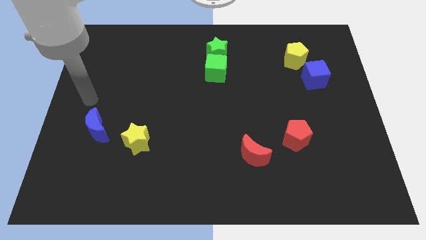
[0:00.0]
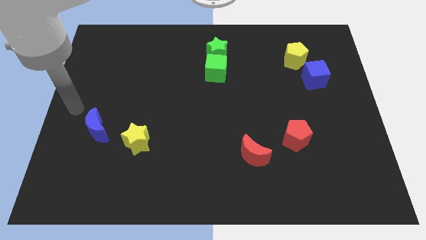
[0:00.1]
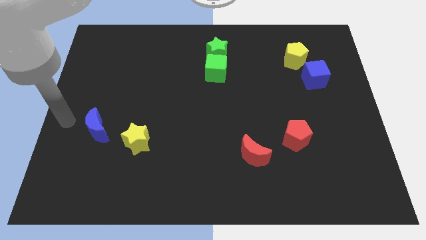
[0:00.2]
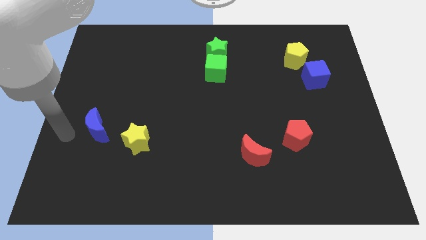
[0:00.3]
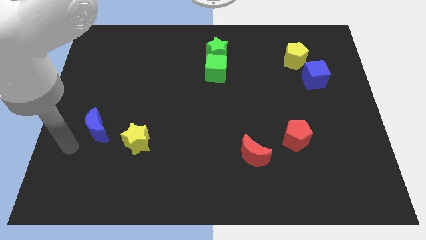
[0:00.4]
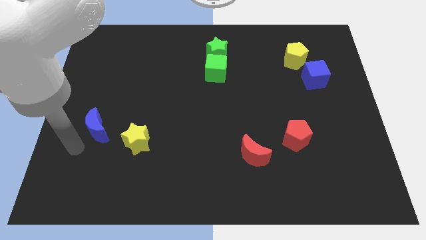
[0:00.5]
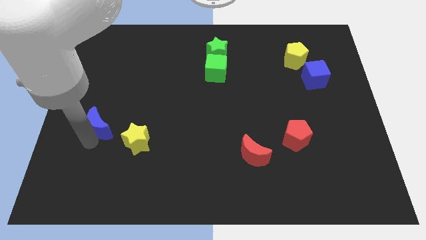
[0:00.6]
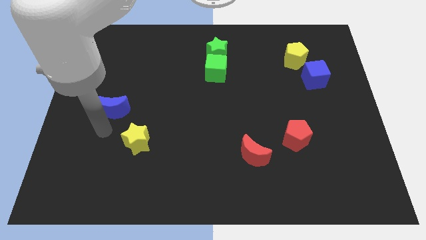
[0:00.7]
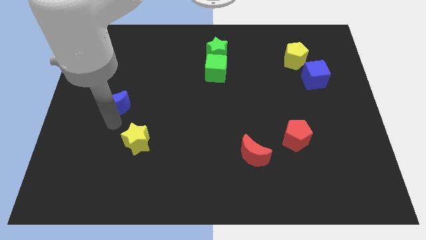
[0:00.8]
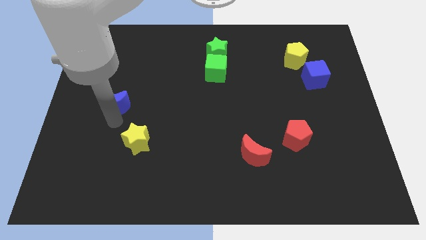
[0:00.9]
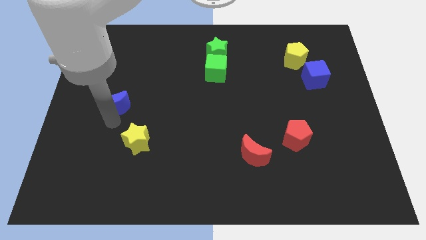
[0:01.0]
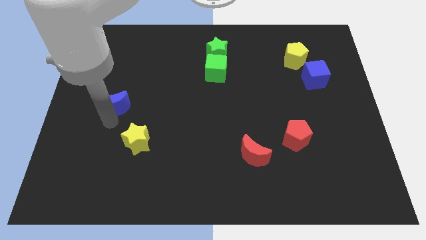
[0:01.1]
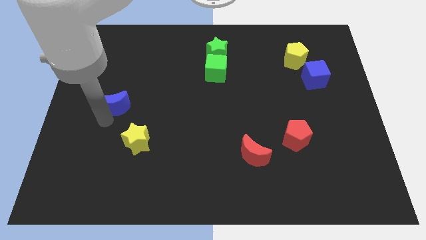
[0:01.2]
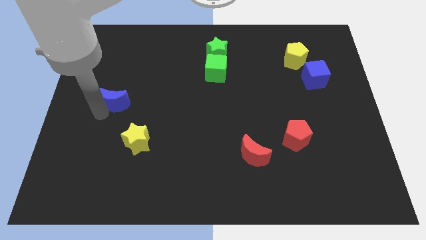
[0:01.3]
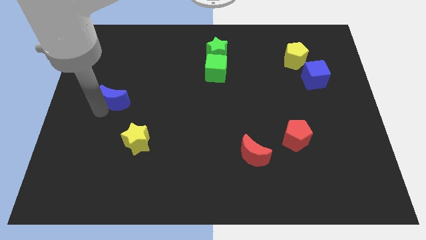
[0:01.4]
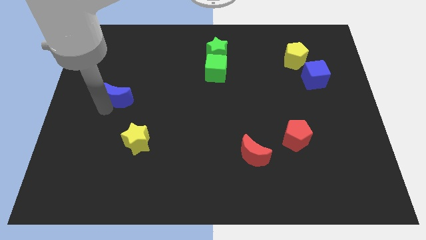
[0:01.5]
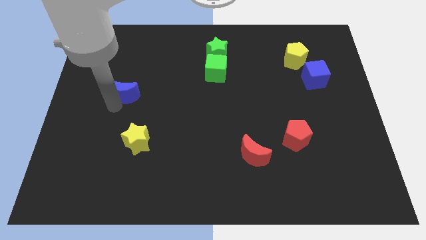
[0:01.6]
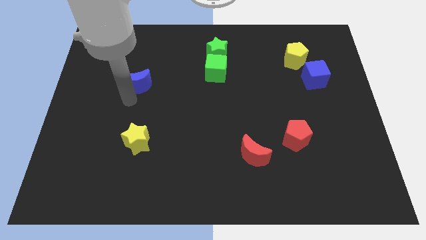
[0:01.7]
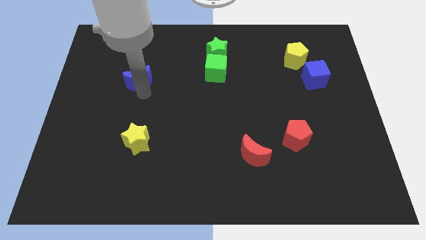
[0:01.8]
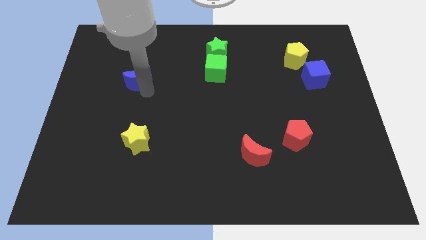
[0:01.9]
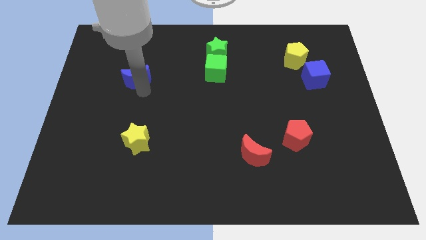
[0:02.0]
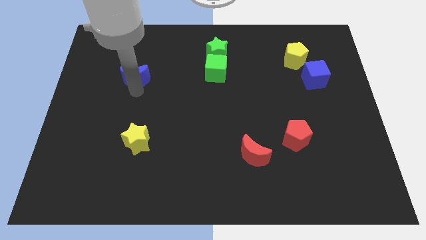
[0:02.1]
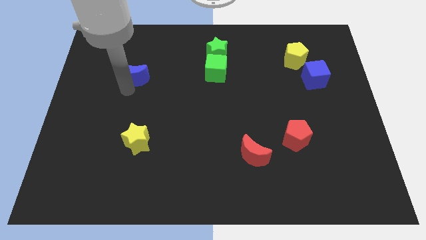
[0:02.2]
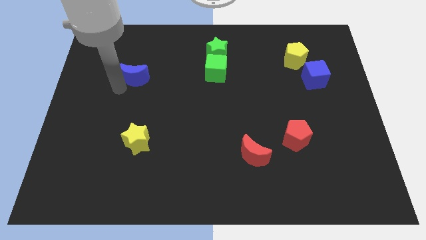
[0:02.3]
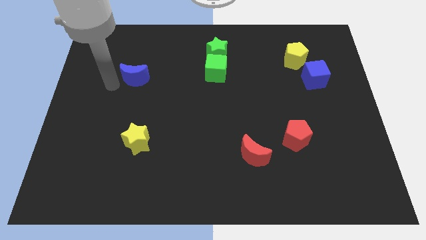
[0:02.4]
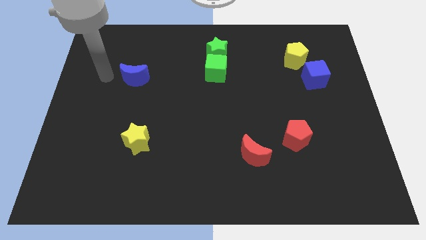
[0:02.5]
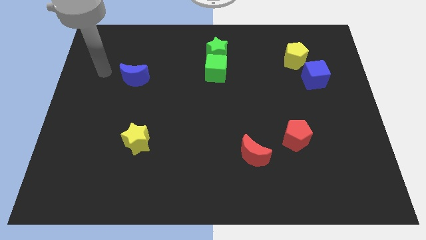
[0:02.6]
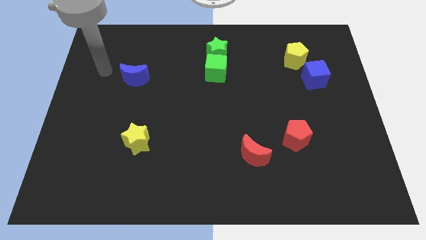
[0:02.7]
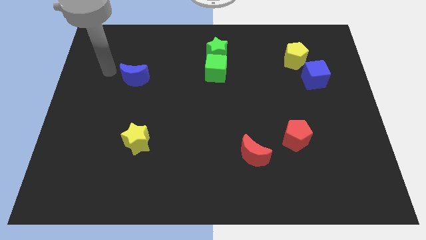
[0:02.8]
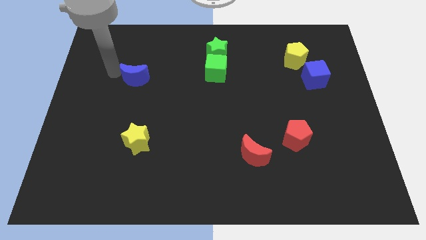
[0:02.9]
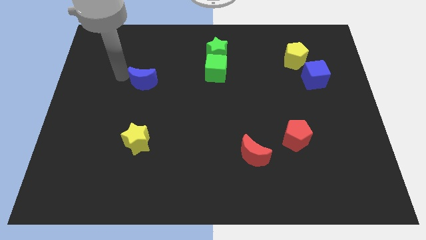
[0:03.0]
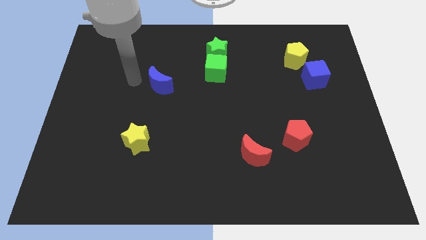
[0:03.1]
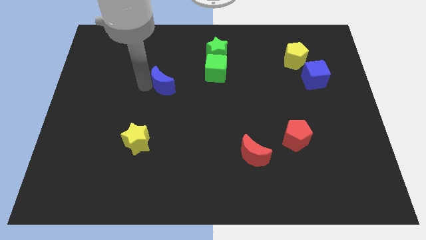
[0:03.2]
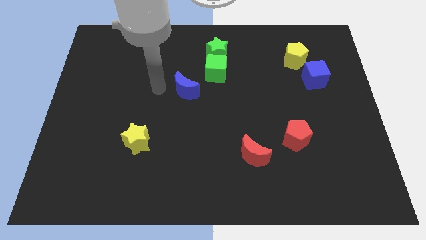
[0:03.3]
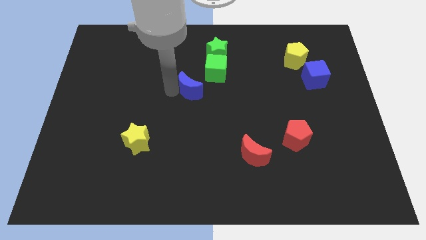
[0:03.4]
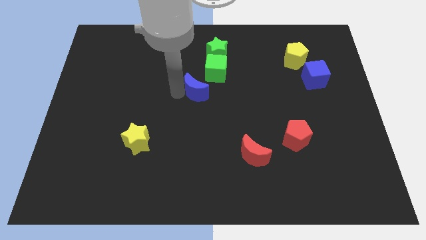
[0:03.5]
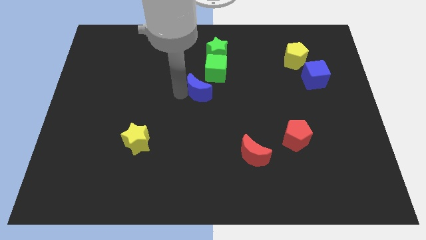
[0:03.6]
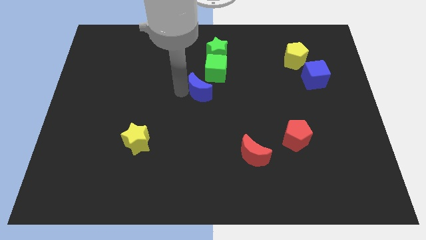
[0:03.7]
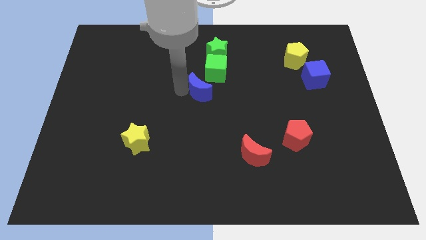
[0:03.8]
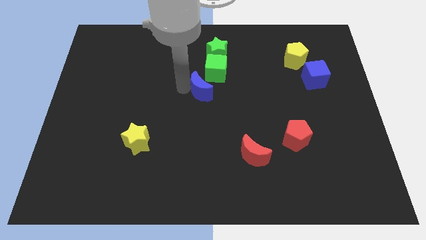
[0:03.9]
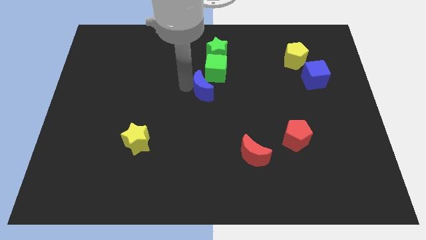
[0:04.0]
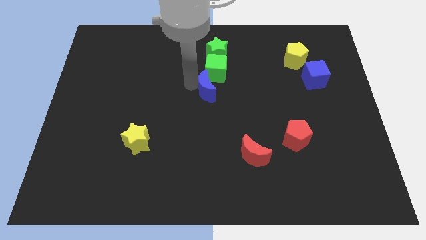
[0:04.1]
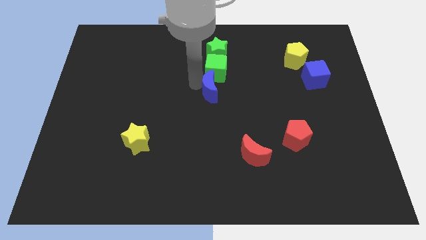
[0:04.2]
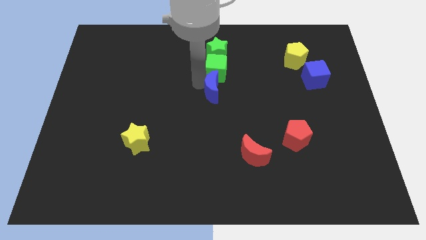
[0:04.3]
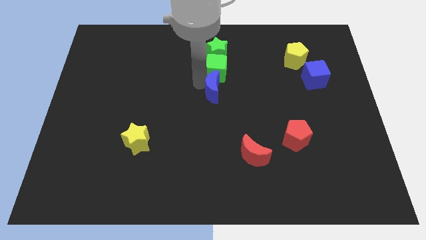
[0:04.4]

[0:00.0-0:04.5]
push the blue crescent towards the green cube

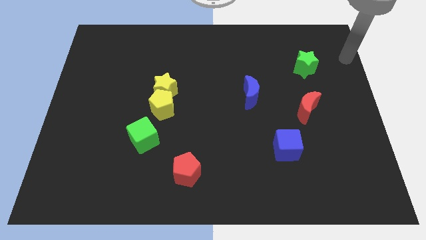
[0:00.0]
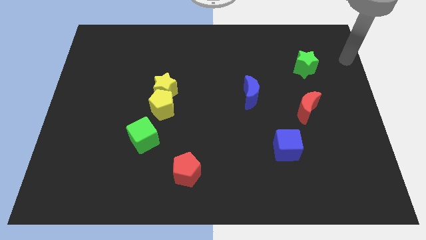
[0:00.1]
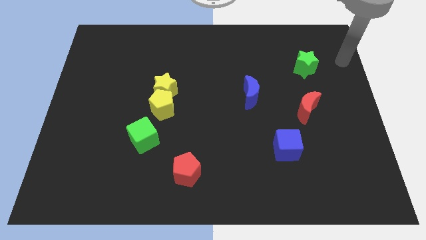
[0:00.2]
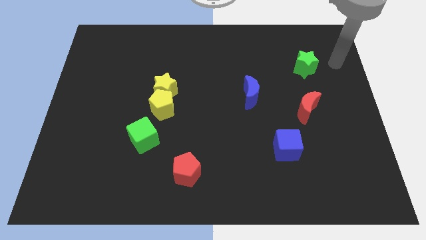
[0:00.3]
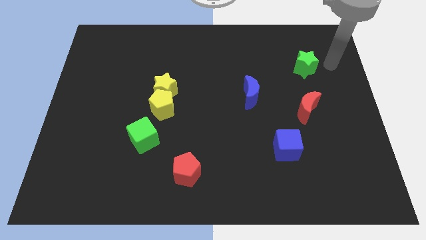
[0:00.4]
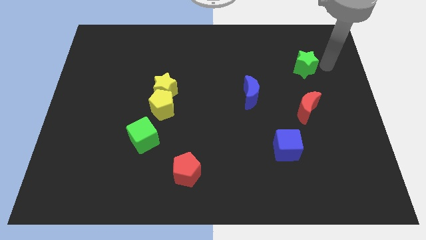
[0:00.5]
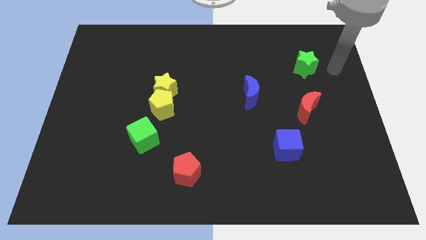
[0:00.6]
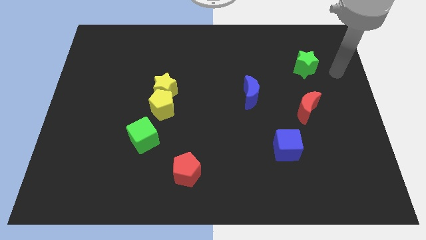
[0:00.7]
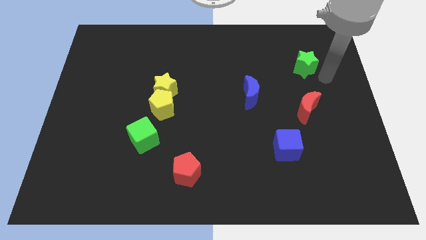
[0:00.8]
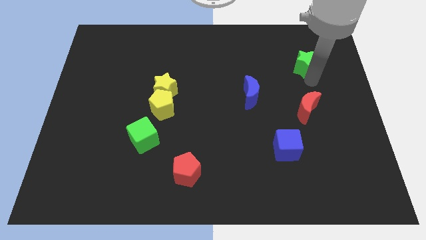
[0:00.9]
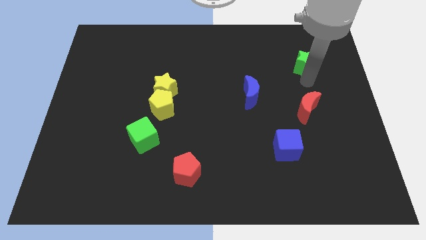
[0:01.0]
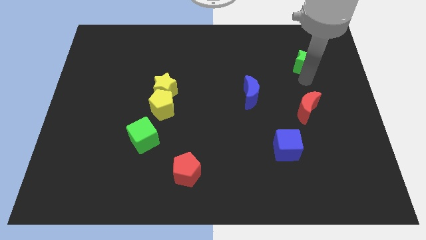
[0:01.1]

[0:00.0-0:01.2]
place your arm below the green star

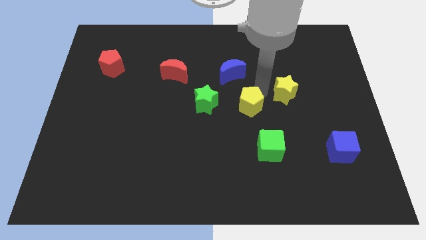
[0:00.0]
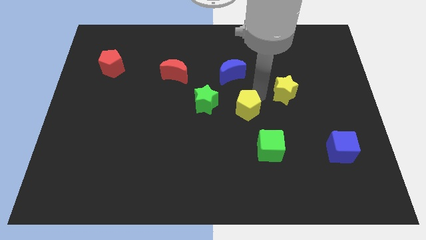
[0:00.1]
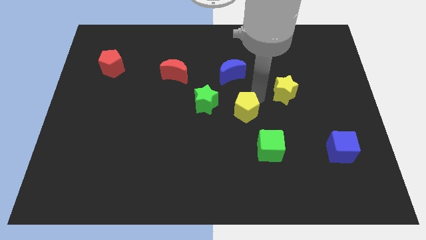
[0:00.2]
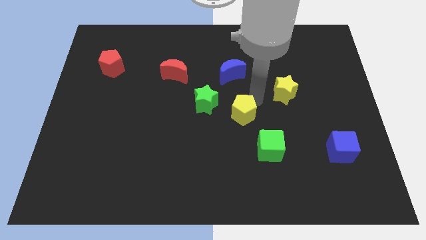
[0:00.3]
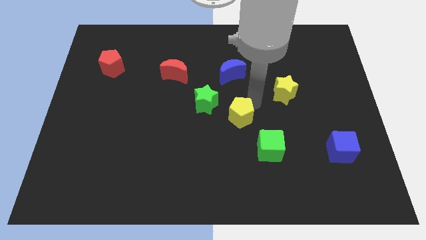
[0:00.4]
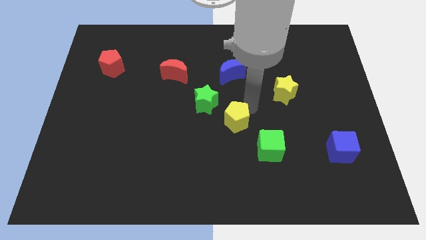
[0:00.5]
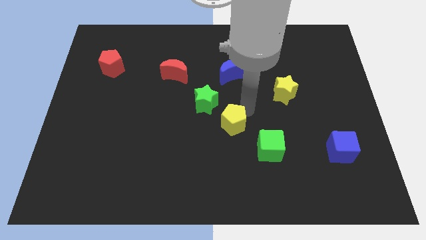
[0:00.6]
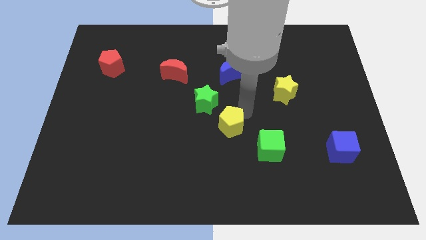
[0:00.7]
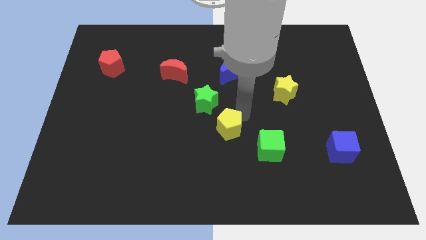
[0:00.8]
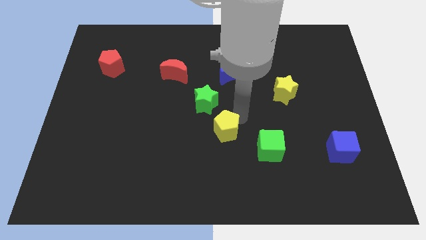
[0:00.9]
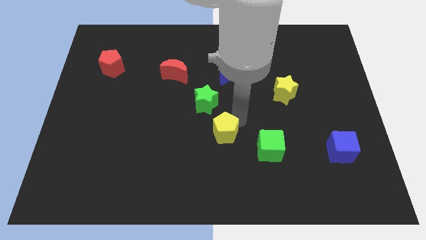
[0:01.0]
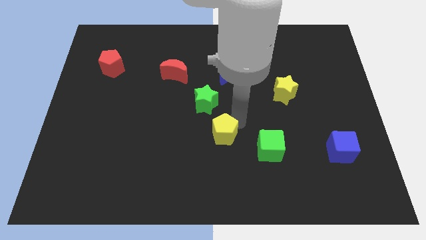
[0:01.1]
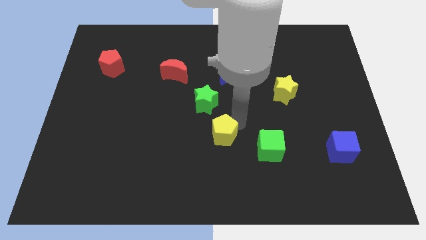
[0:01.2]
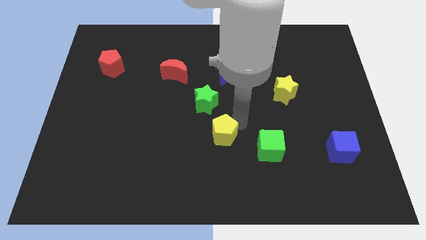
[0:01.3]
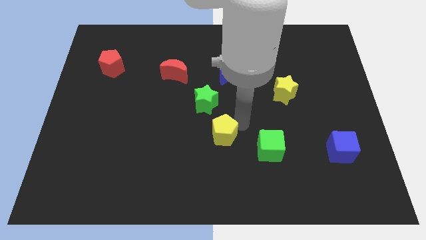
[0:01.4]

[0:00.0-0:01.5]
push the yellow pentagon to the bottom right of the green star

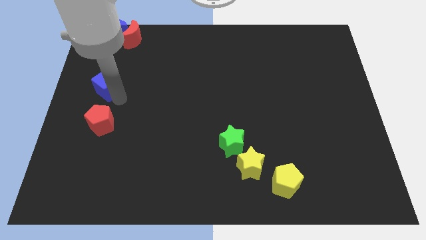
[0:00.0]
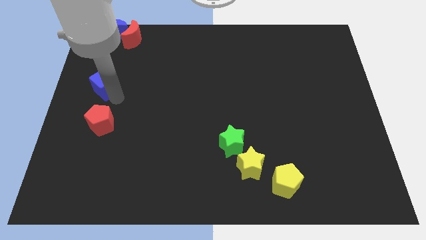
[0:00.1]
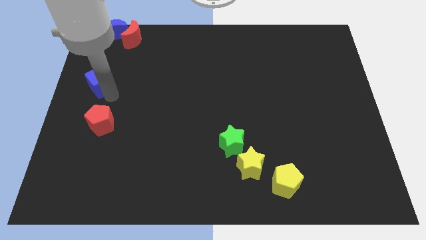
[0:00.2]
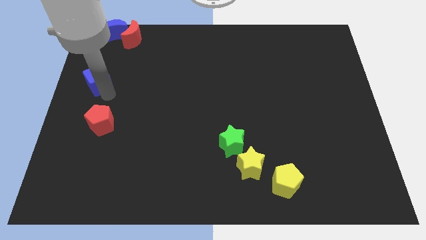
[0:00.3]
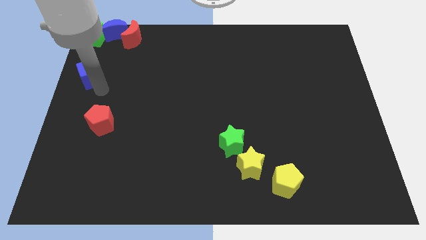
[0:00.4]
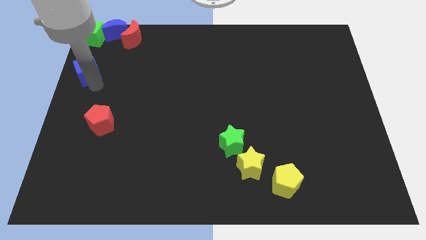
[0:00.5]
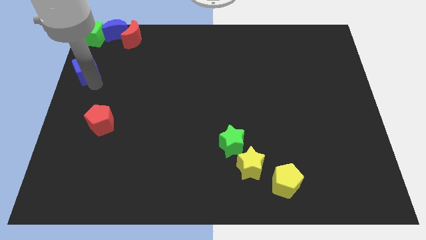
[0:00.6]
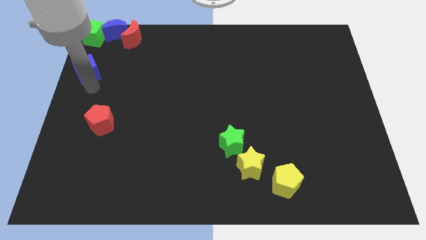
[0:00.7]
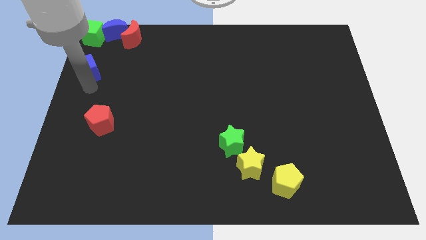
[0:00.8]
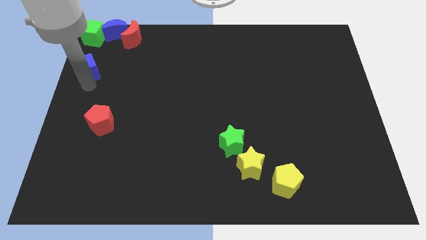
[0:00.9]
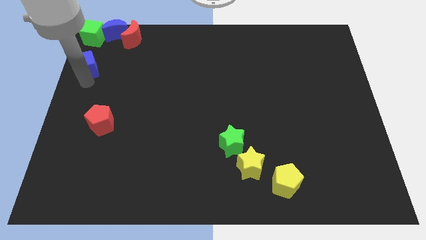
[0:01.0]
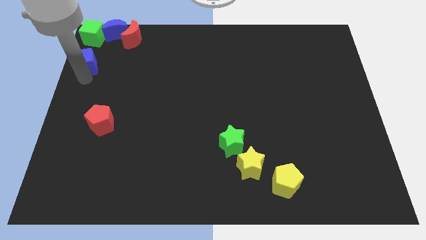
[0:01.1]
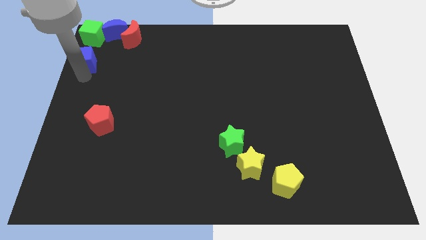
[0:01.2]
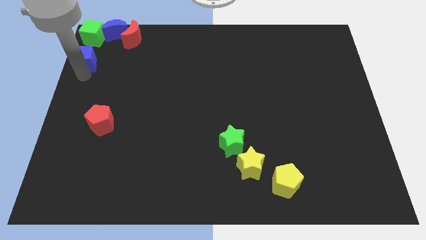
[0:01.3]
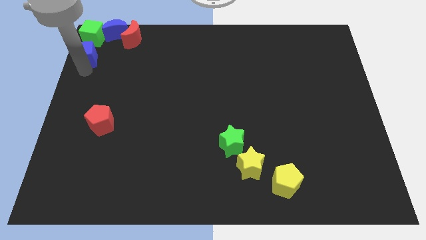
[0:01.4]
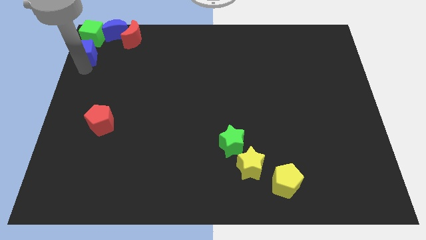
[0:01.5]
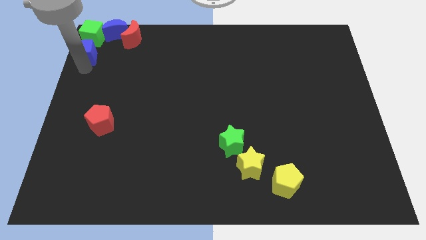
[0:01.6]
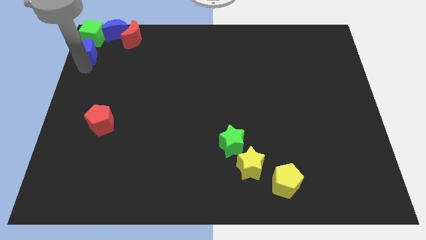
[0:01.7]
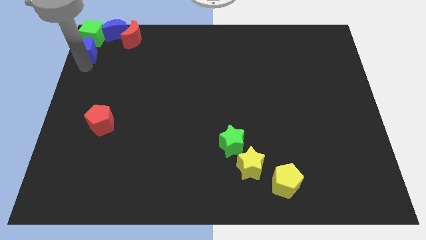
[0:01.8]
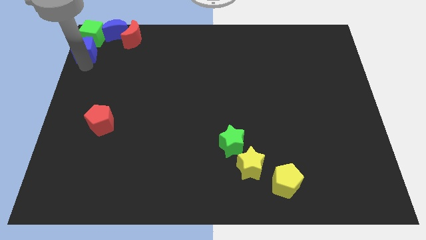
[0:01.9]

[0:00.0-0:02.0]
push the blue cube into the green cube
